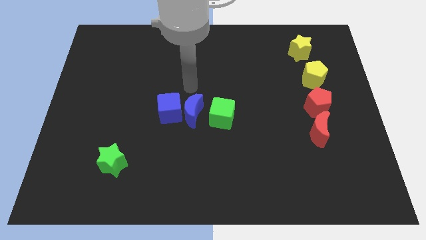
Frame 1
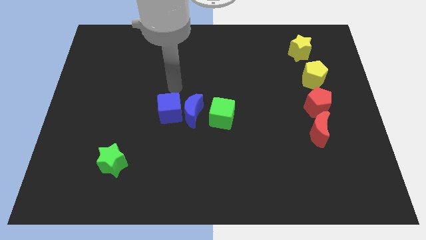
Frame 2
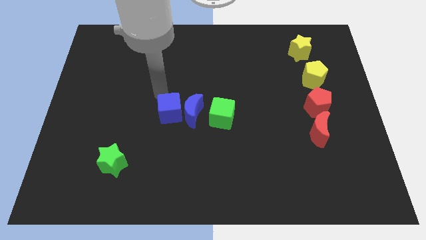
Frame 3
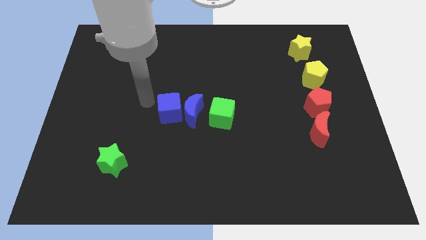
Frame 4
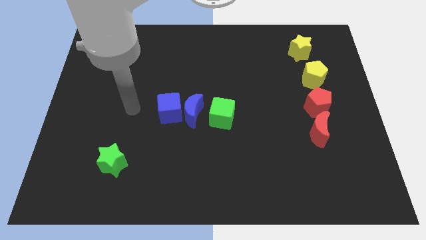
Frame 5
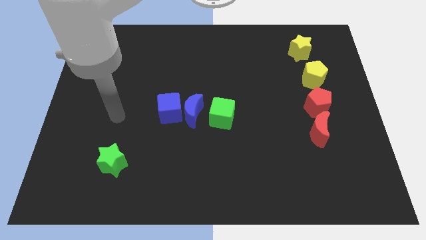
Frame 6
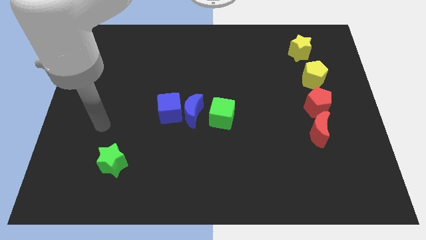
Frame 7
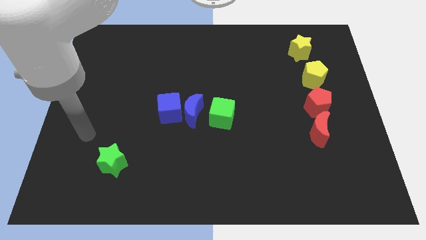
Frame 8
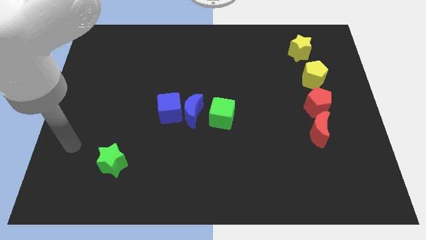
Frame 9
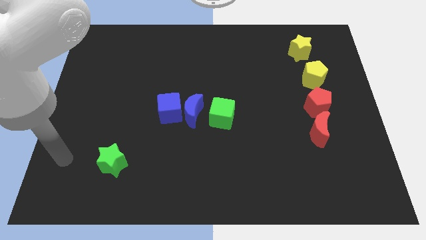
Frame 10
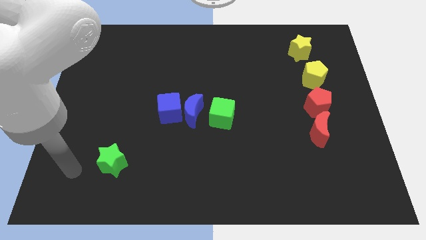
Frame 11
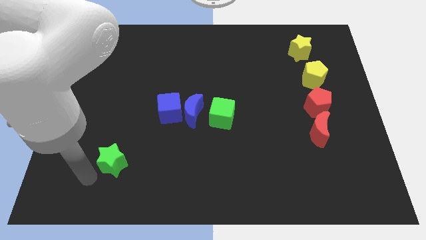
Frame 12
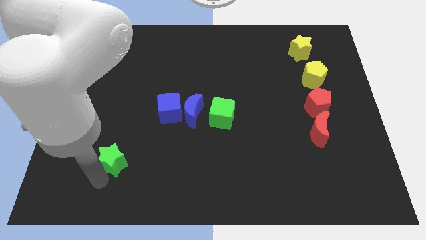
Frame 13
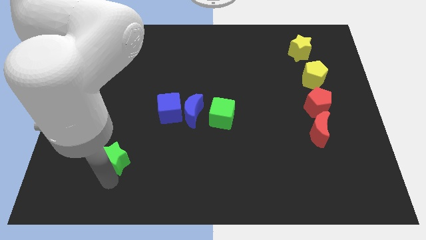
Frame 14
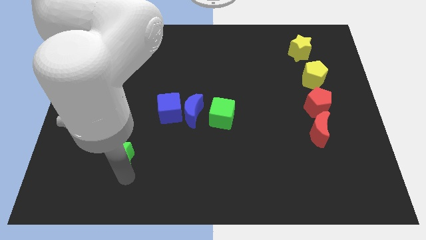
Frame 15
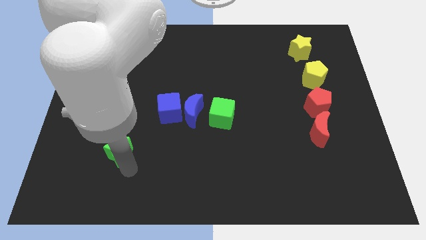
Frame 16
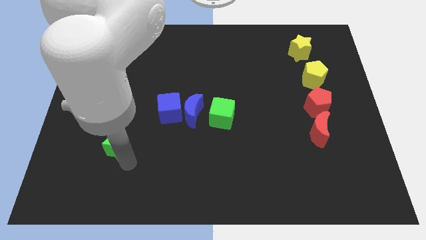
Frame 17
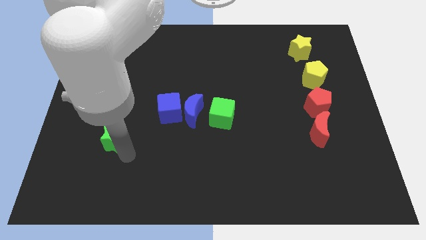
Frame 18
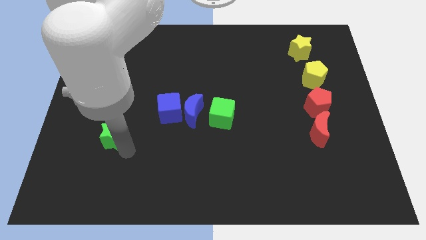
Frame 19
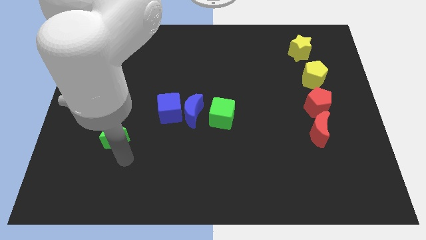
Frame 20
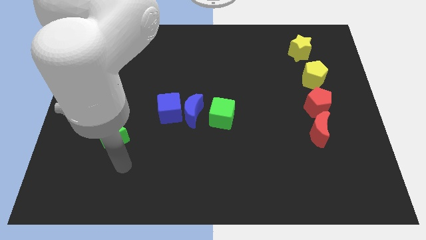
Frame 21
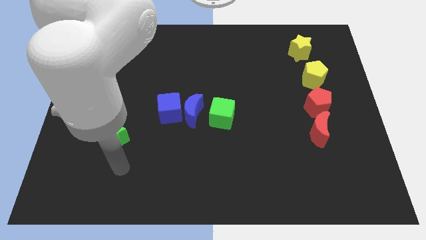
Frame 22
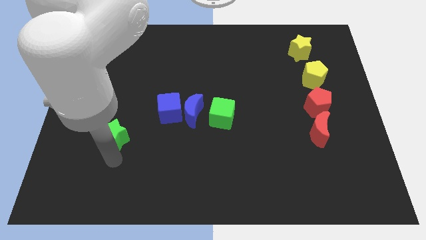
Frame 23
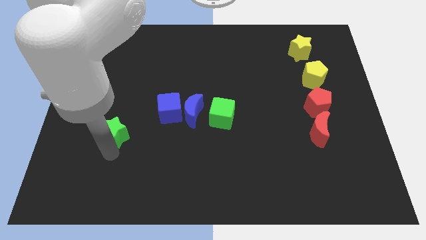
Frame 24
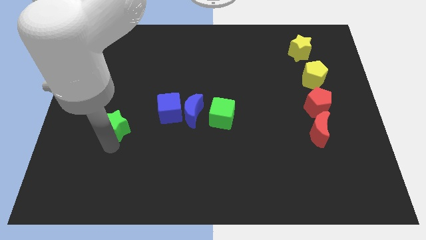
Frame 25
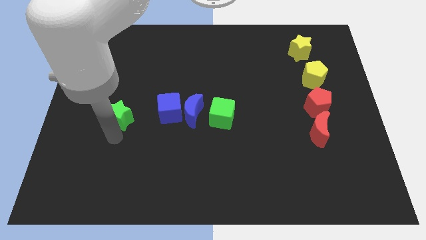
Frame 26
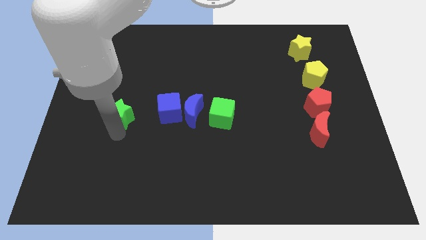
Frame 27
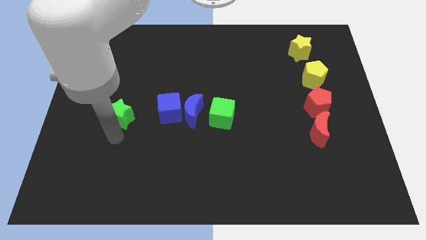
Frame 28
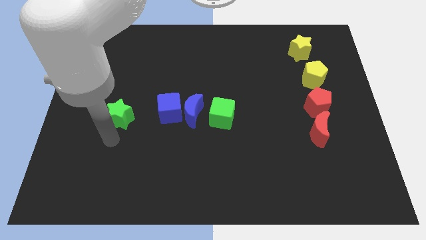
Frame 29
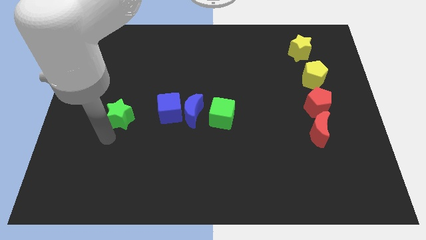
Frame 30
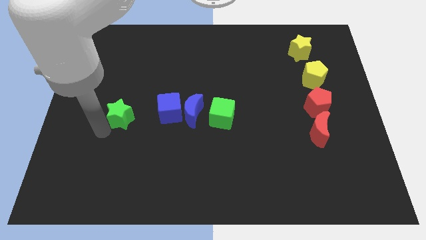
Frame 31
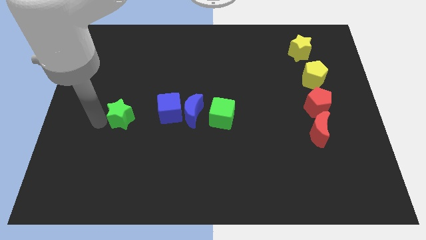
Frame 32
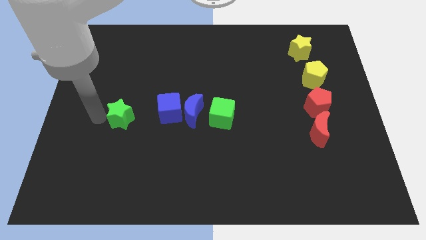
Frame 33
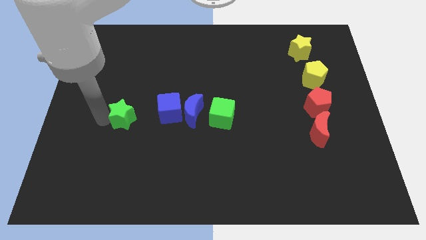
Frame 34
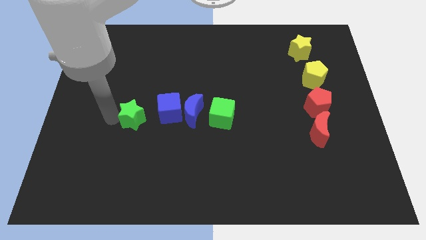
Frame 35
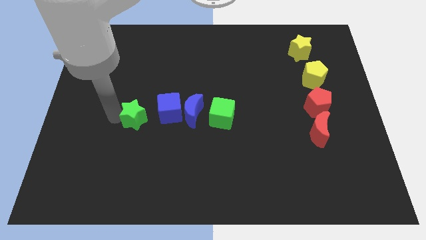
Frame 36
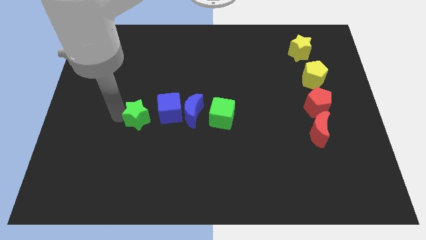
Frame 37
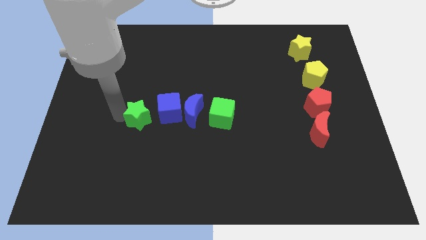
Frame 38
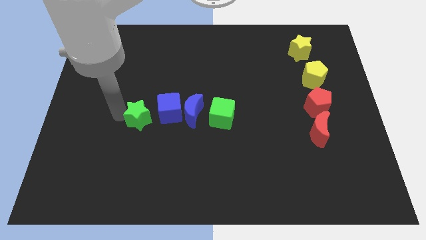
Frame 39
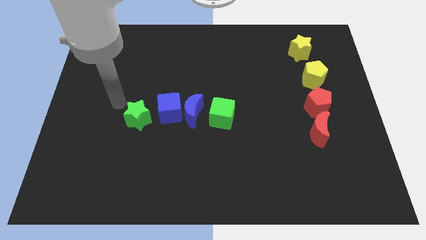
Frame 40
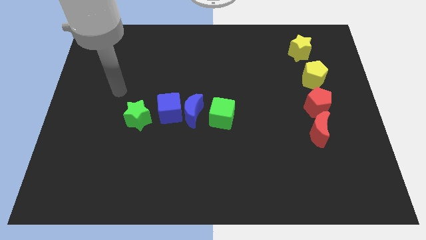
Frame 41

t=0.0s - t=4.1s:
push green star close to blue cube

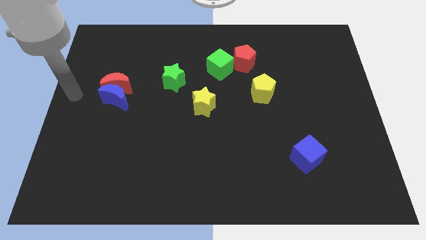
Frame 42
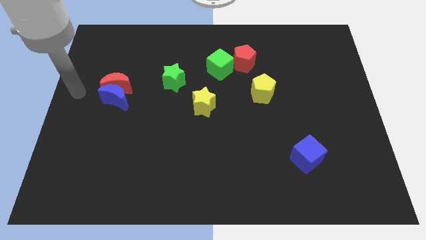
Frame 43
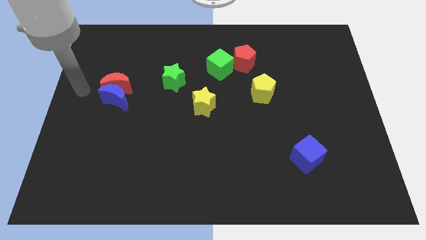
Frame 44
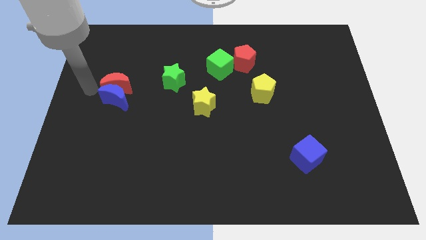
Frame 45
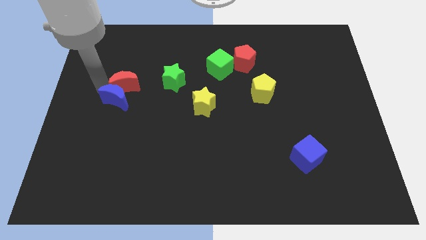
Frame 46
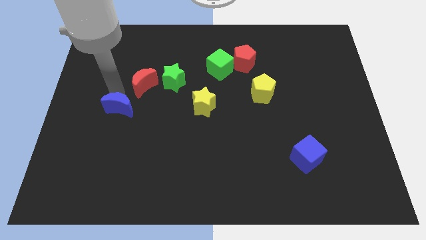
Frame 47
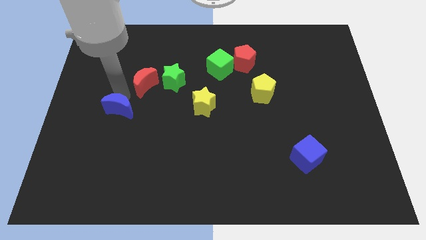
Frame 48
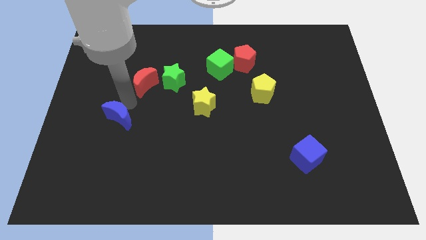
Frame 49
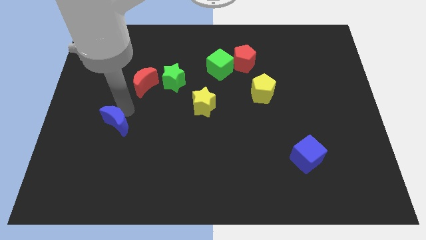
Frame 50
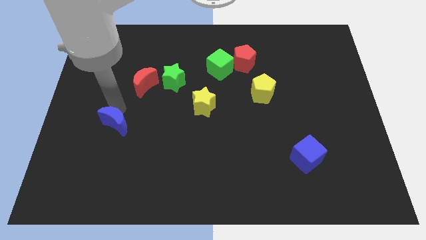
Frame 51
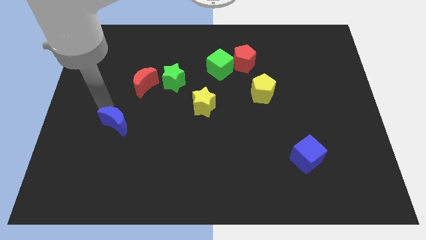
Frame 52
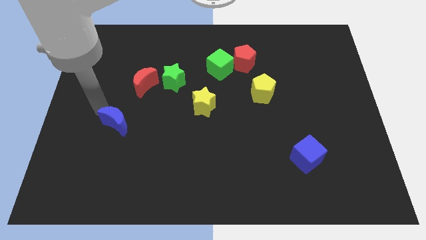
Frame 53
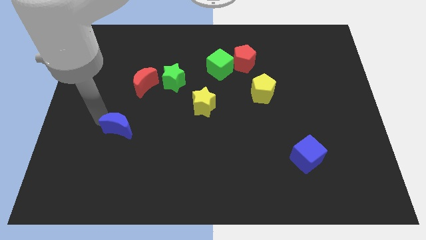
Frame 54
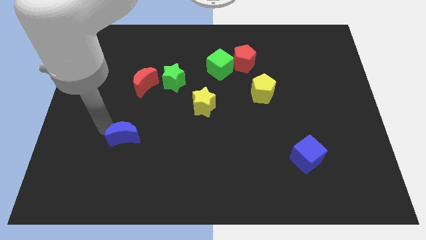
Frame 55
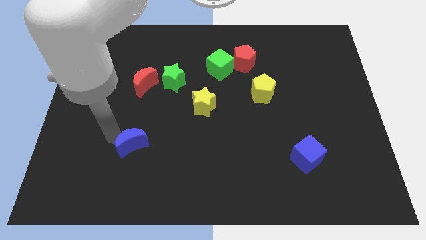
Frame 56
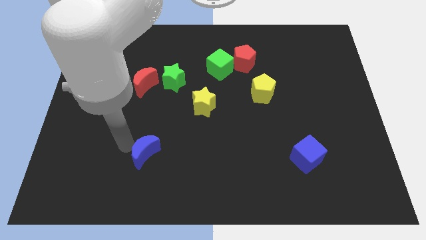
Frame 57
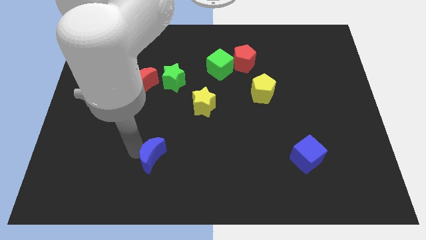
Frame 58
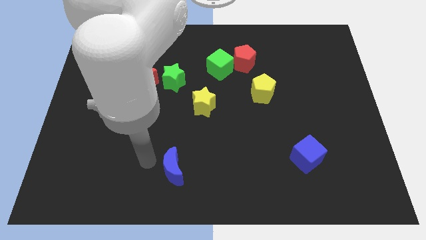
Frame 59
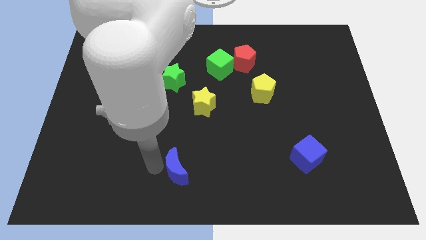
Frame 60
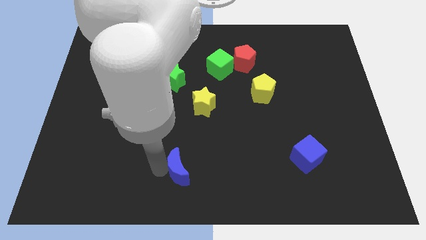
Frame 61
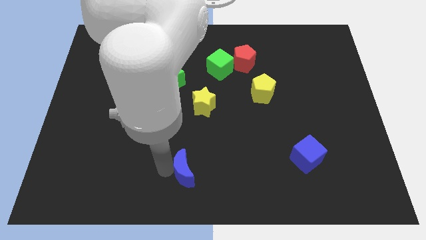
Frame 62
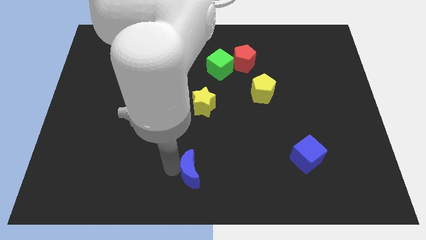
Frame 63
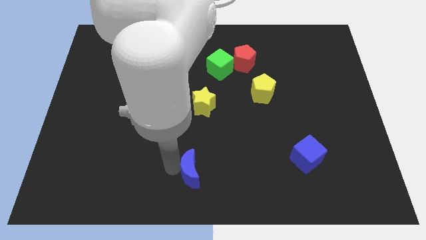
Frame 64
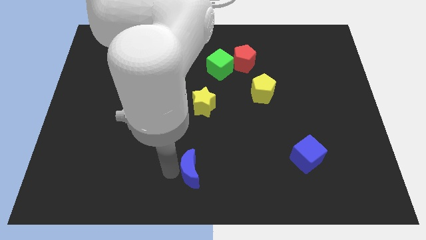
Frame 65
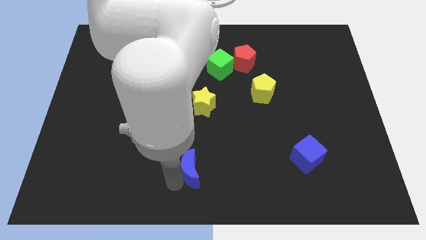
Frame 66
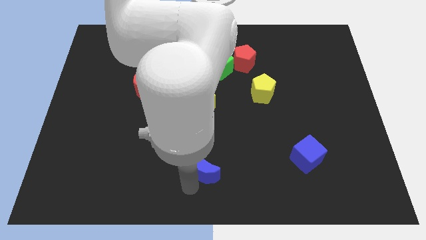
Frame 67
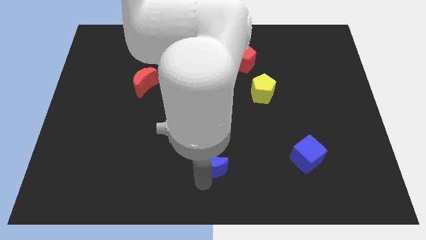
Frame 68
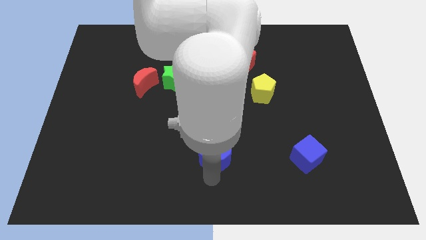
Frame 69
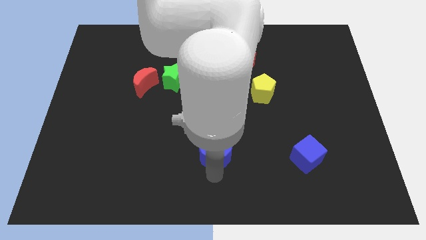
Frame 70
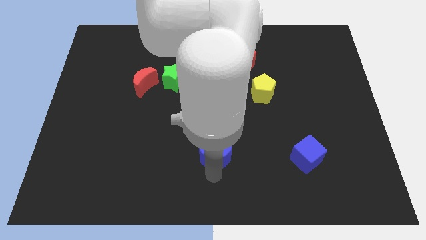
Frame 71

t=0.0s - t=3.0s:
move the blue crescent to the bottom centre on the board

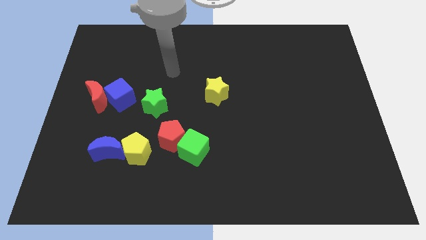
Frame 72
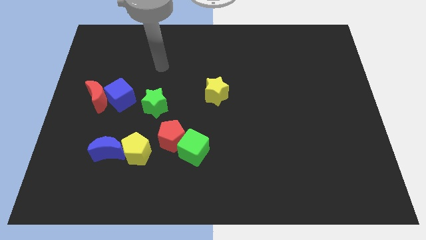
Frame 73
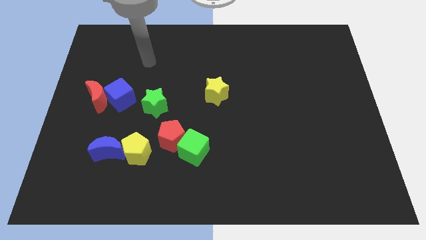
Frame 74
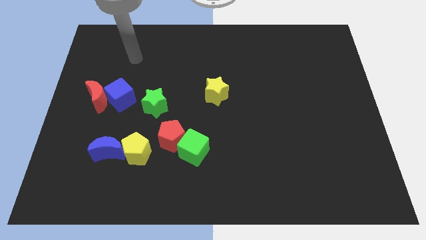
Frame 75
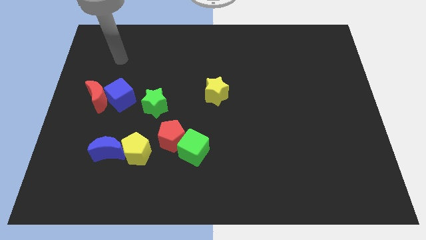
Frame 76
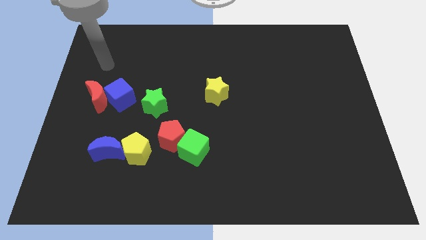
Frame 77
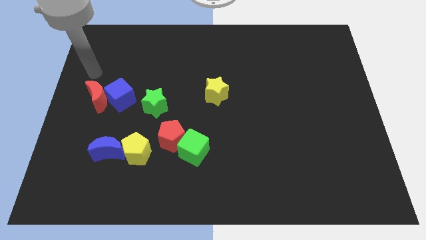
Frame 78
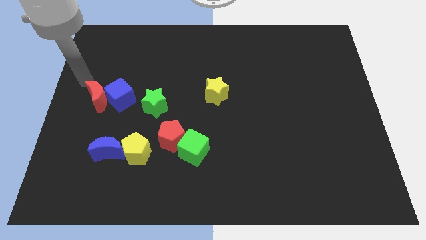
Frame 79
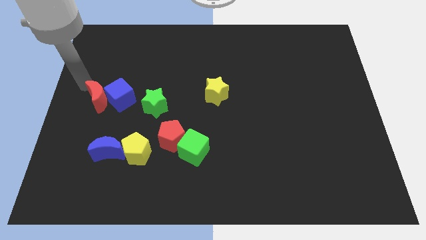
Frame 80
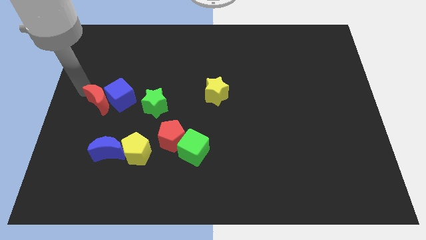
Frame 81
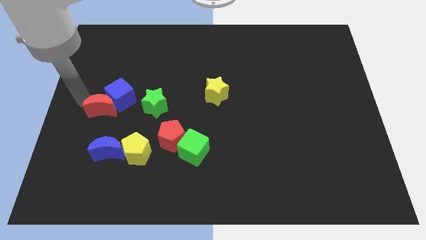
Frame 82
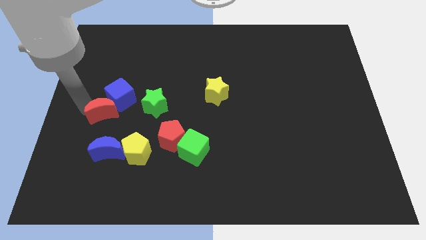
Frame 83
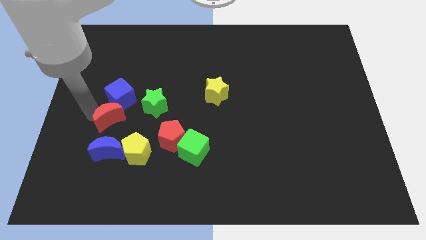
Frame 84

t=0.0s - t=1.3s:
move red moon slightly down

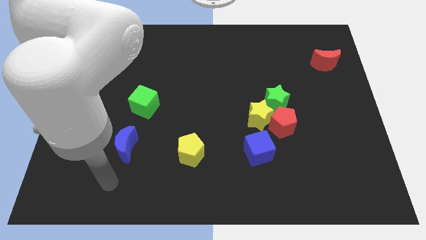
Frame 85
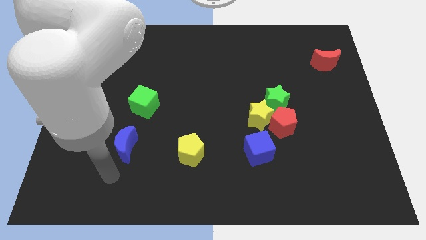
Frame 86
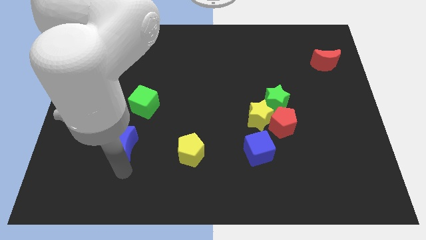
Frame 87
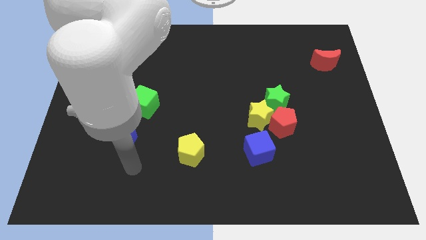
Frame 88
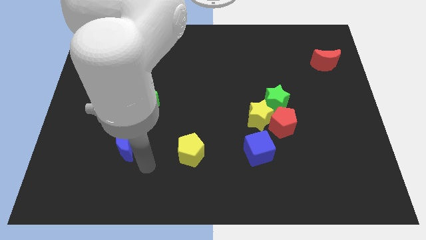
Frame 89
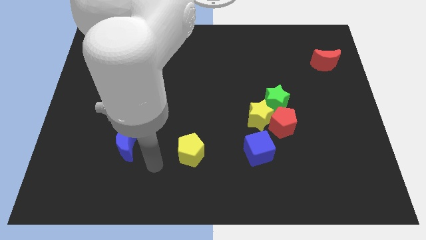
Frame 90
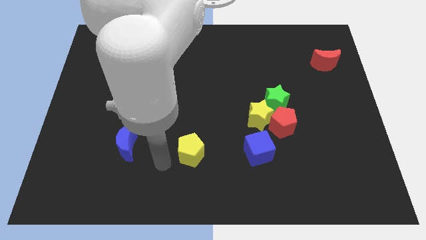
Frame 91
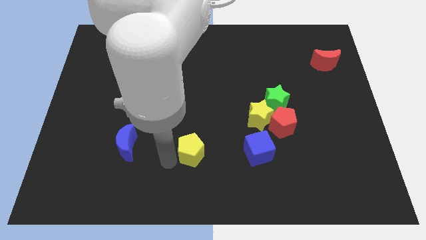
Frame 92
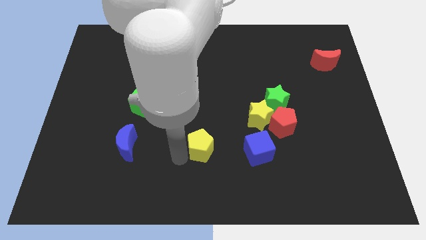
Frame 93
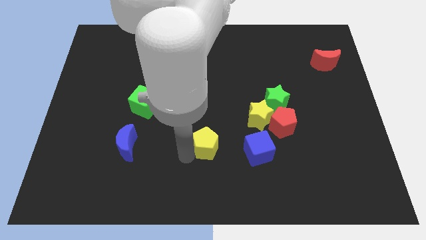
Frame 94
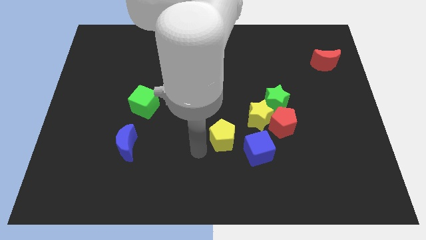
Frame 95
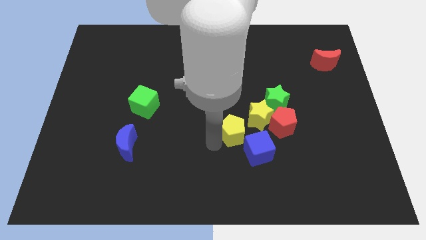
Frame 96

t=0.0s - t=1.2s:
place the arm in between blue moon and blue cube
